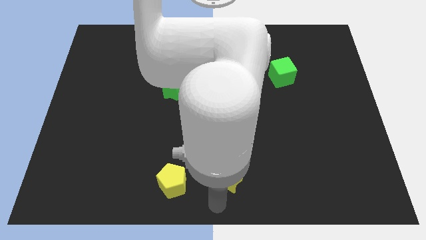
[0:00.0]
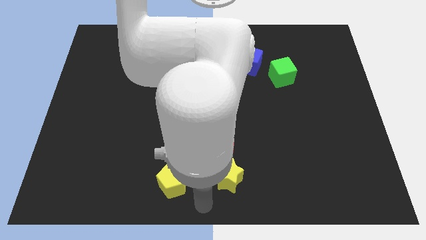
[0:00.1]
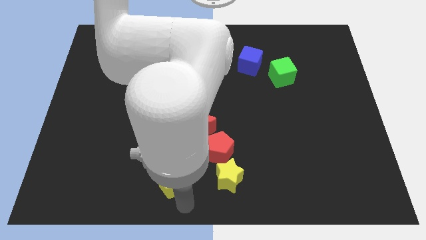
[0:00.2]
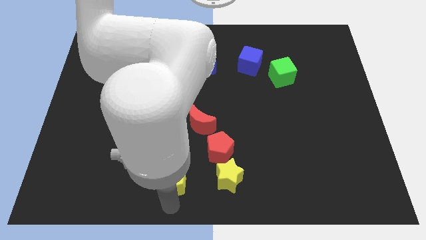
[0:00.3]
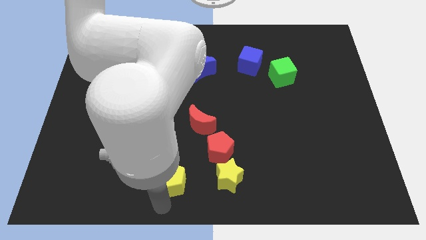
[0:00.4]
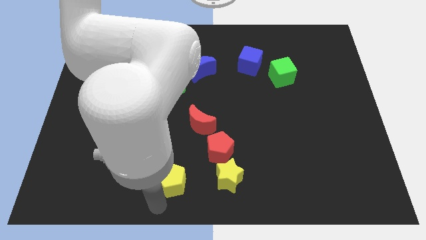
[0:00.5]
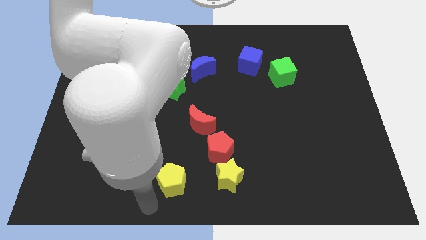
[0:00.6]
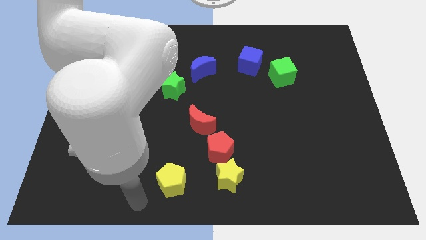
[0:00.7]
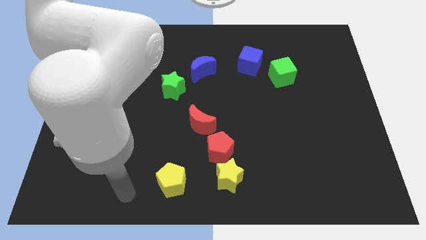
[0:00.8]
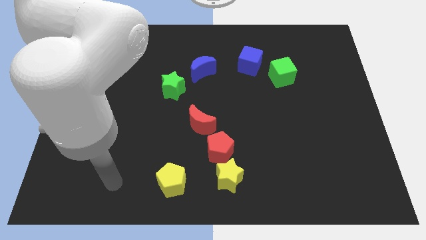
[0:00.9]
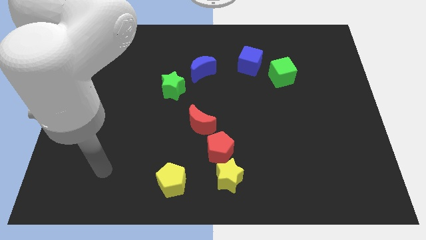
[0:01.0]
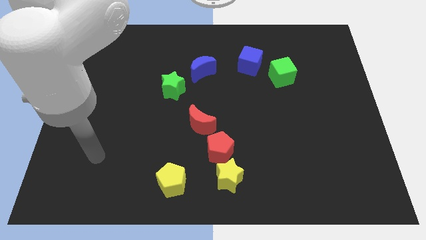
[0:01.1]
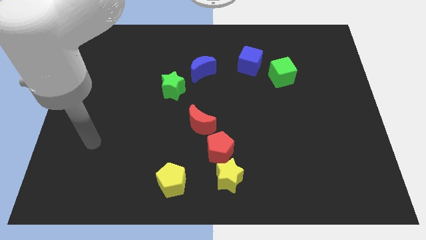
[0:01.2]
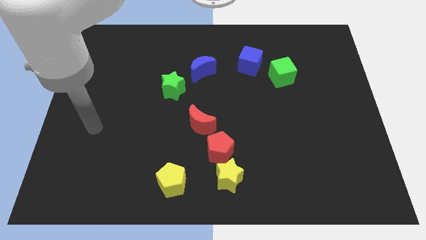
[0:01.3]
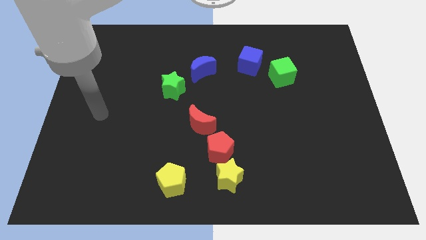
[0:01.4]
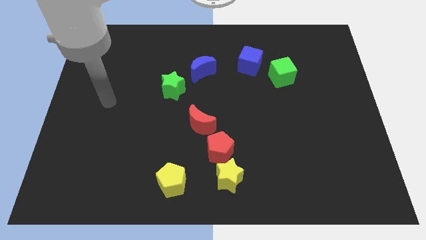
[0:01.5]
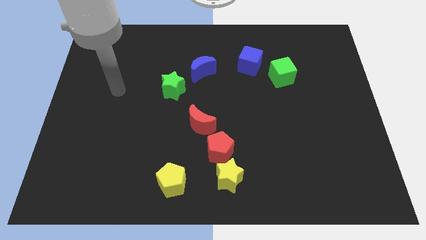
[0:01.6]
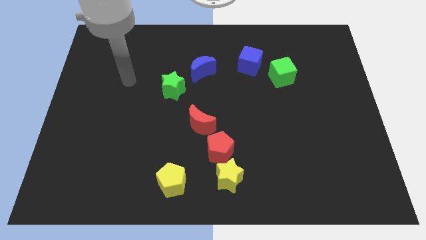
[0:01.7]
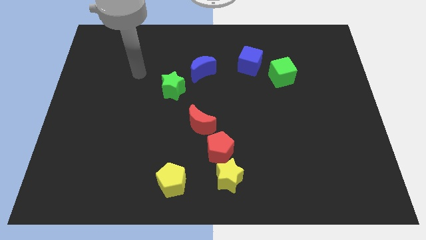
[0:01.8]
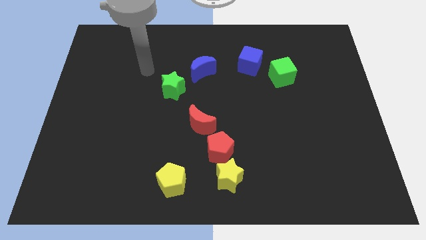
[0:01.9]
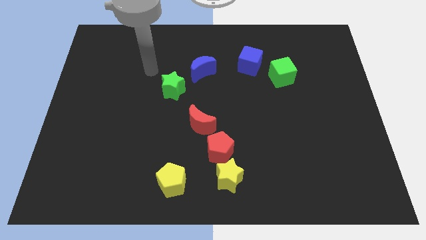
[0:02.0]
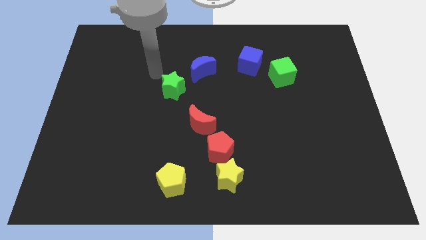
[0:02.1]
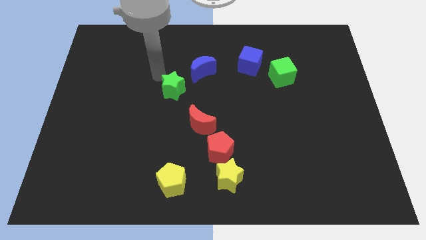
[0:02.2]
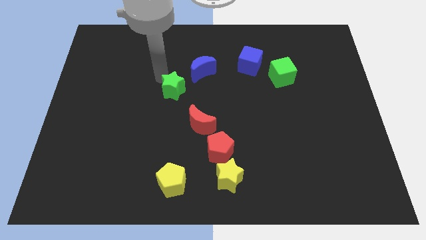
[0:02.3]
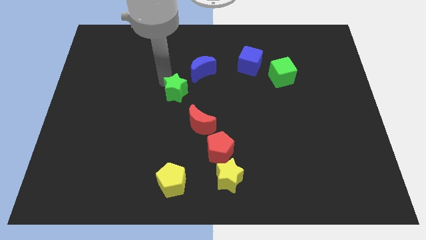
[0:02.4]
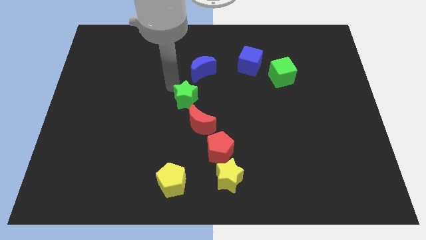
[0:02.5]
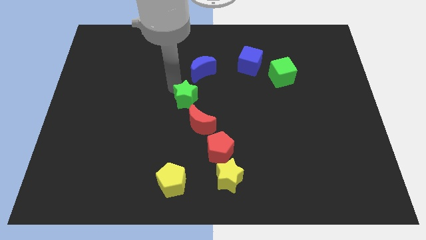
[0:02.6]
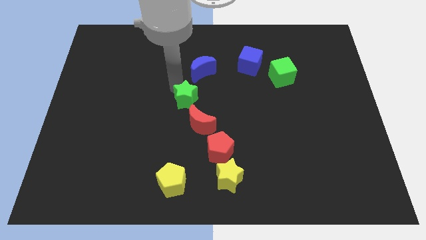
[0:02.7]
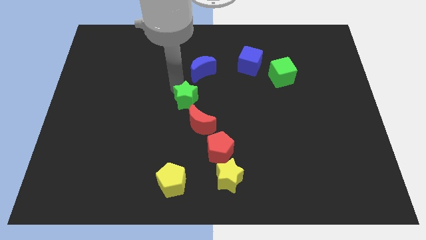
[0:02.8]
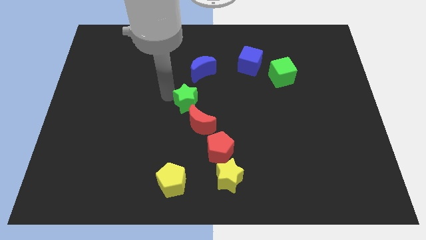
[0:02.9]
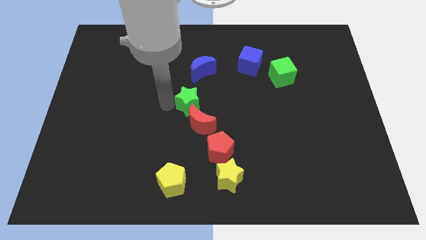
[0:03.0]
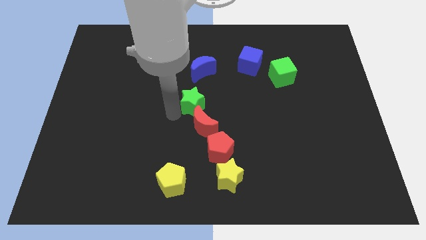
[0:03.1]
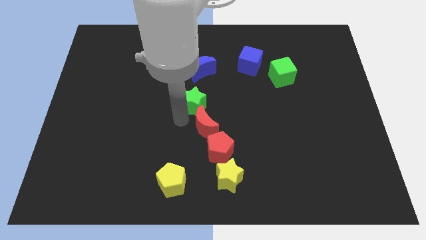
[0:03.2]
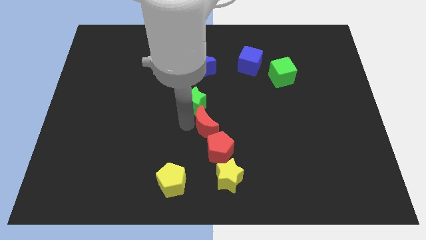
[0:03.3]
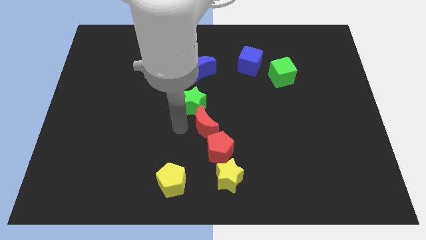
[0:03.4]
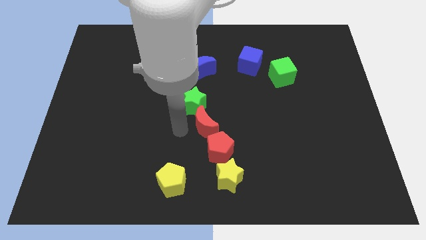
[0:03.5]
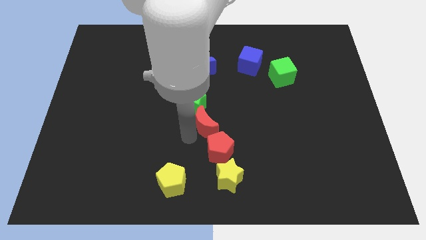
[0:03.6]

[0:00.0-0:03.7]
push the green star above to the red crescent

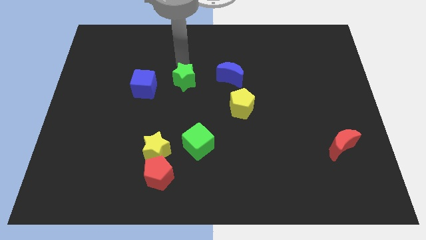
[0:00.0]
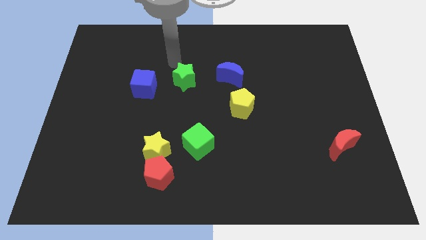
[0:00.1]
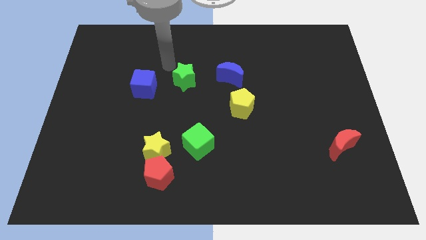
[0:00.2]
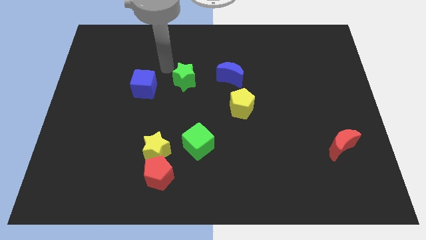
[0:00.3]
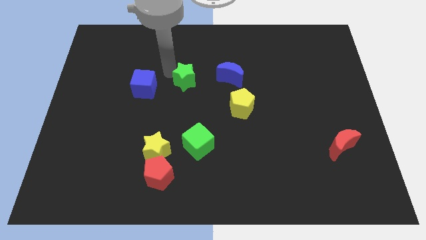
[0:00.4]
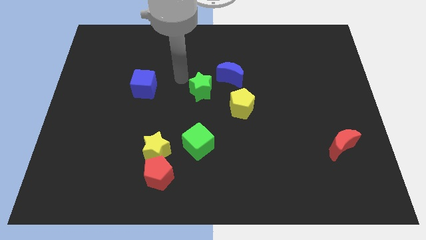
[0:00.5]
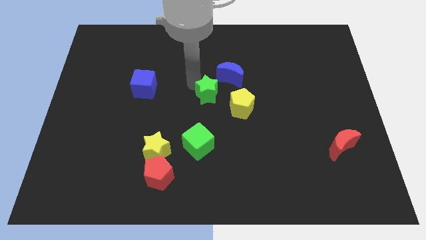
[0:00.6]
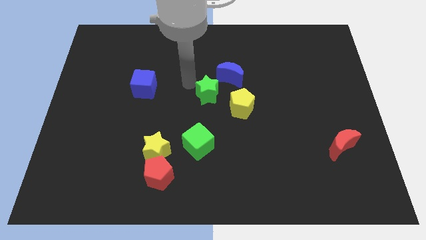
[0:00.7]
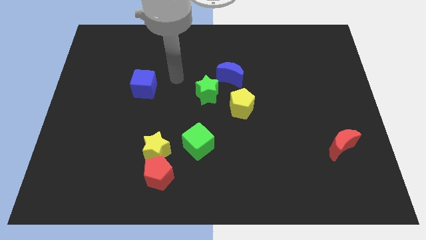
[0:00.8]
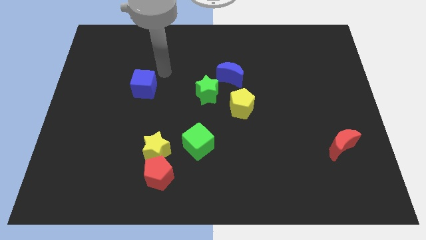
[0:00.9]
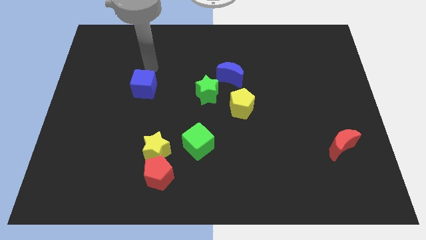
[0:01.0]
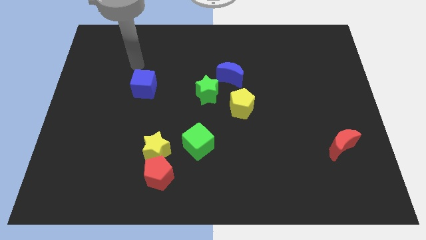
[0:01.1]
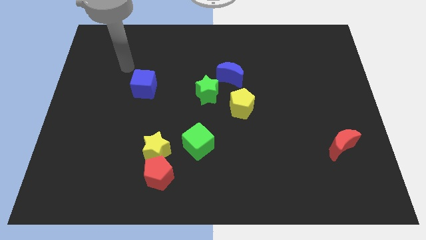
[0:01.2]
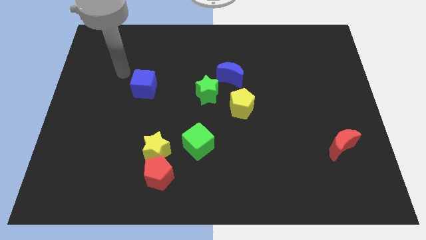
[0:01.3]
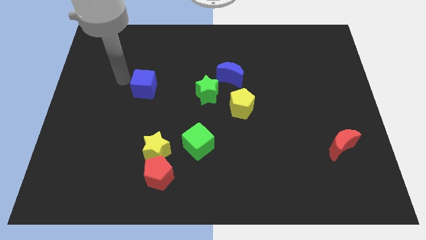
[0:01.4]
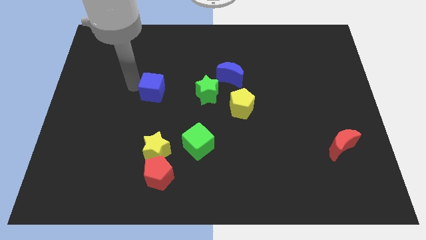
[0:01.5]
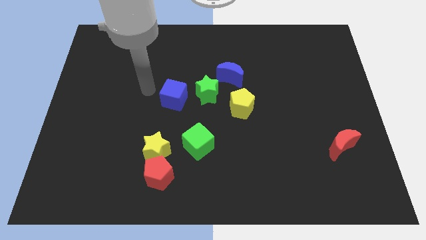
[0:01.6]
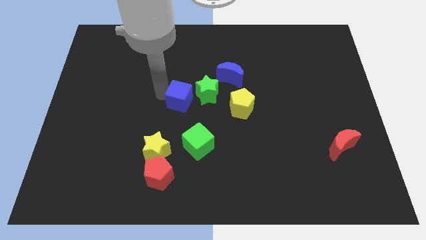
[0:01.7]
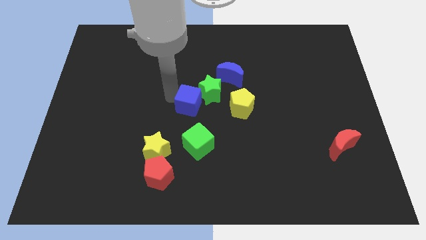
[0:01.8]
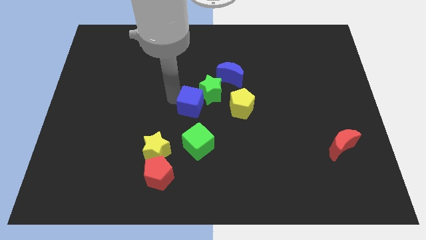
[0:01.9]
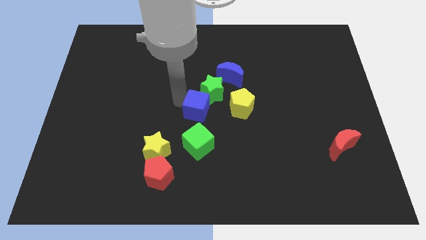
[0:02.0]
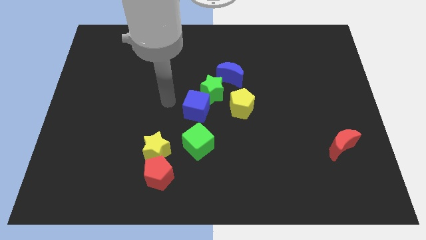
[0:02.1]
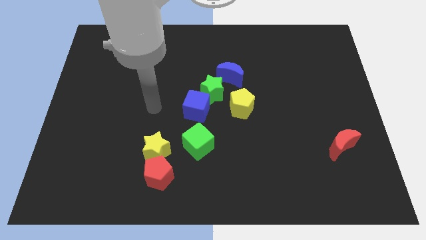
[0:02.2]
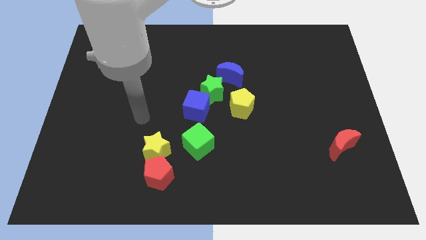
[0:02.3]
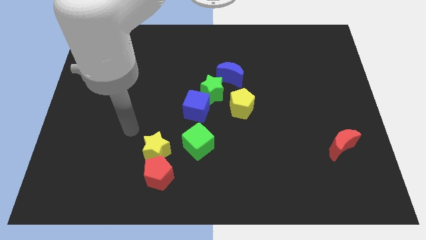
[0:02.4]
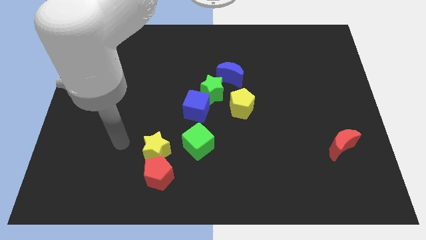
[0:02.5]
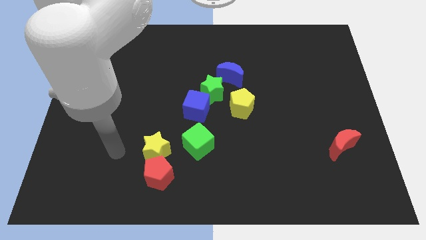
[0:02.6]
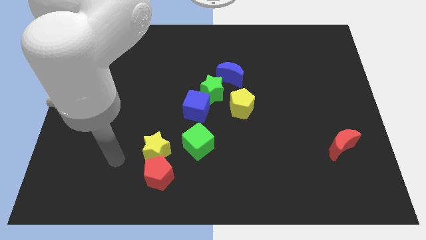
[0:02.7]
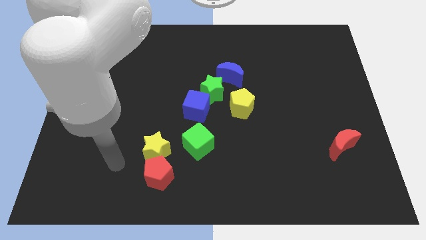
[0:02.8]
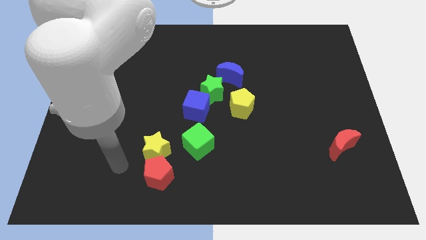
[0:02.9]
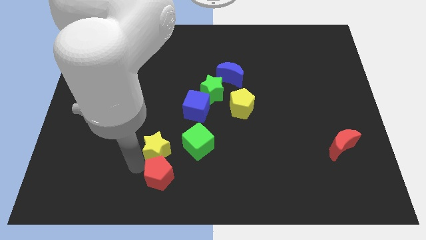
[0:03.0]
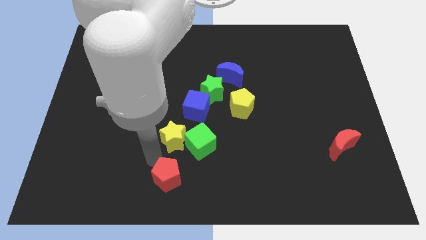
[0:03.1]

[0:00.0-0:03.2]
push the blue cube into the green star

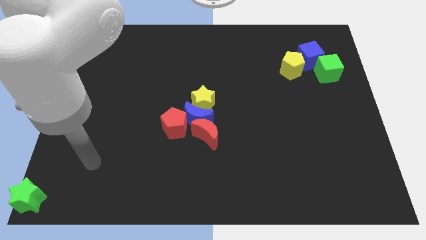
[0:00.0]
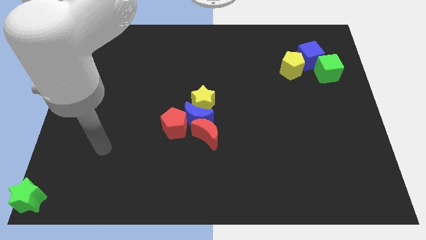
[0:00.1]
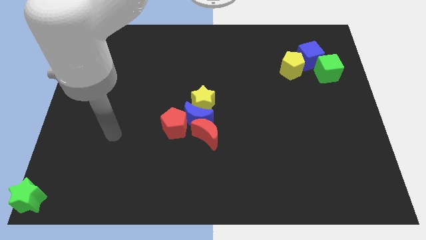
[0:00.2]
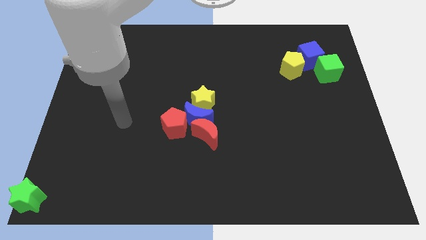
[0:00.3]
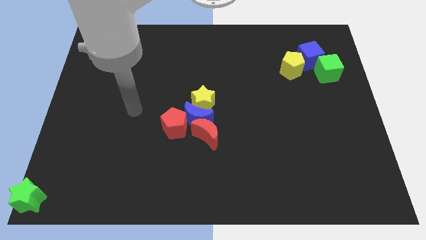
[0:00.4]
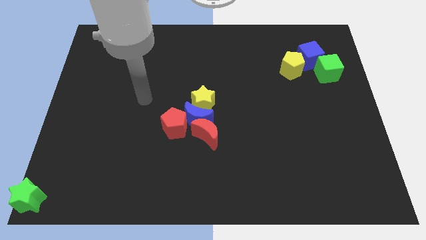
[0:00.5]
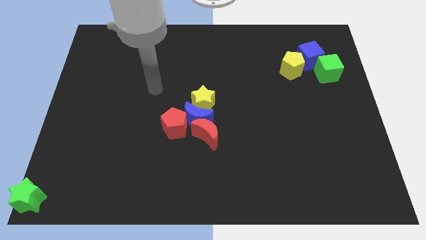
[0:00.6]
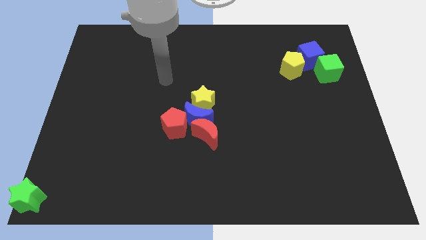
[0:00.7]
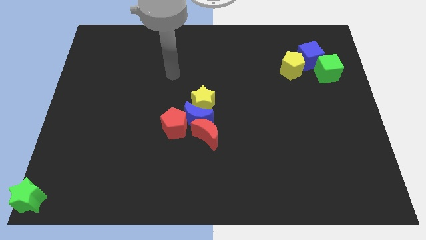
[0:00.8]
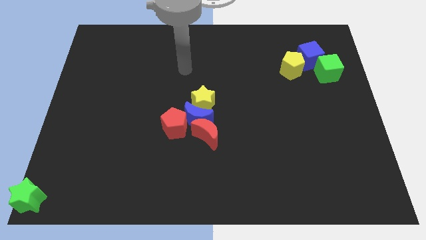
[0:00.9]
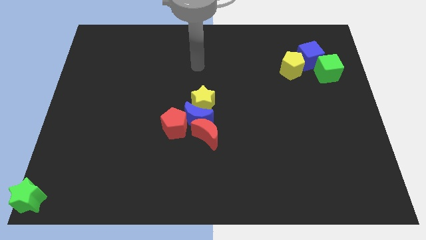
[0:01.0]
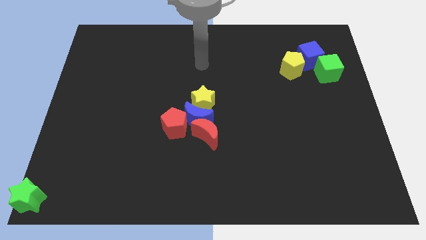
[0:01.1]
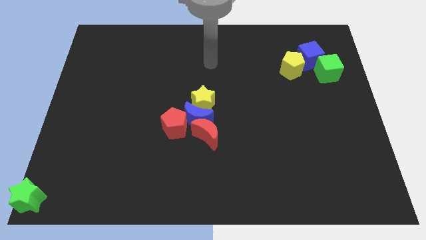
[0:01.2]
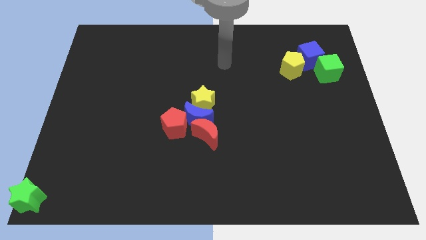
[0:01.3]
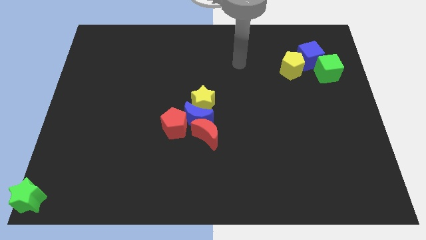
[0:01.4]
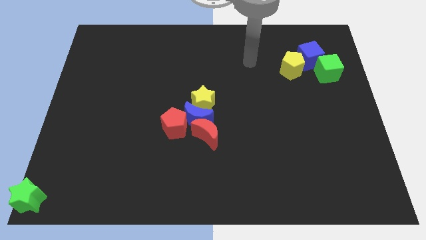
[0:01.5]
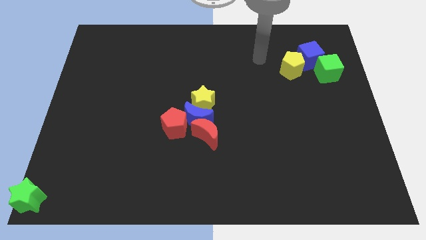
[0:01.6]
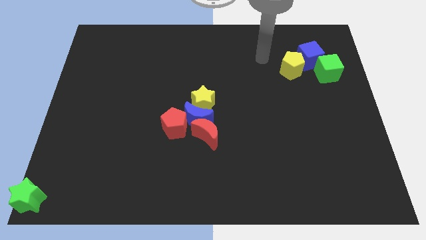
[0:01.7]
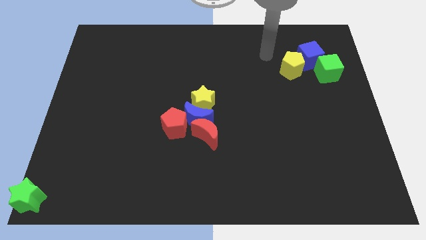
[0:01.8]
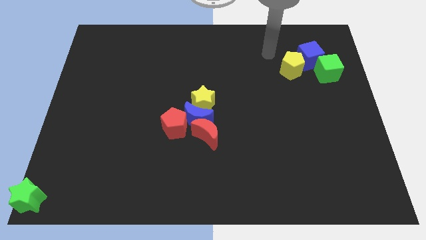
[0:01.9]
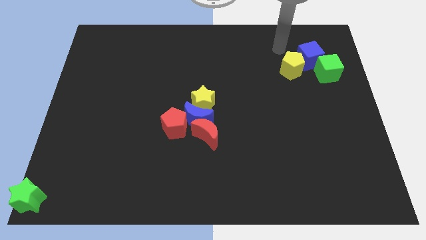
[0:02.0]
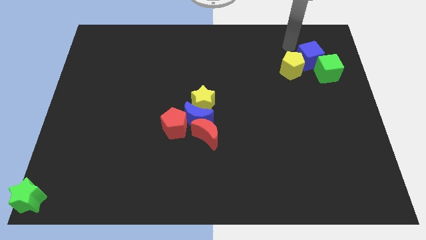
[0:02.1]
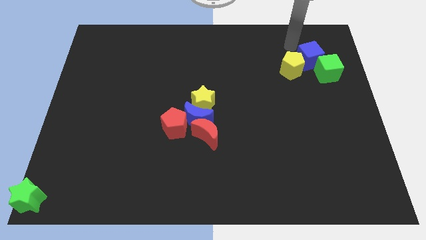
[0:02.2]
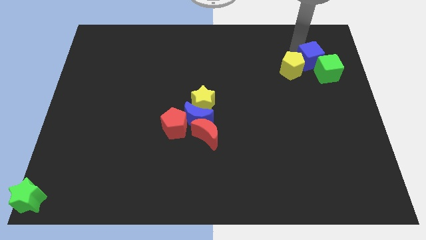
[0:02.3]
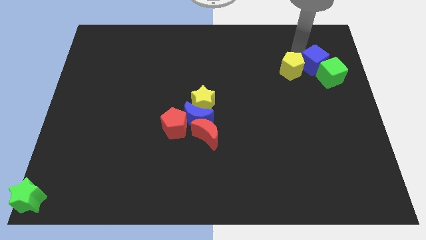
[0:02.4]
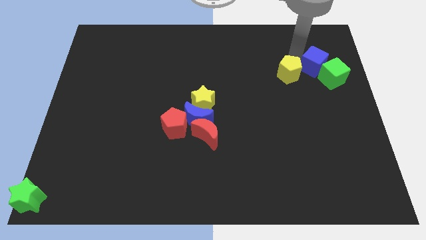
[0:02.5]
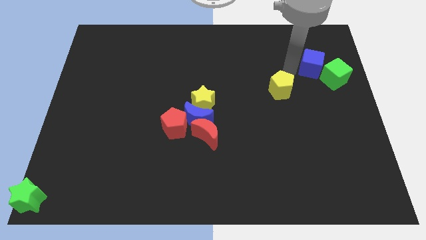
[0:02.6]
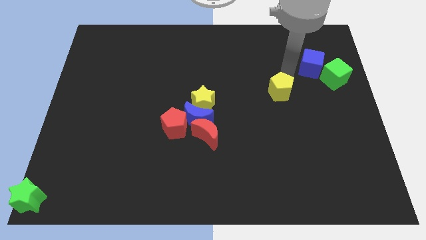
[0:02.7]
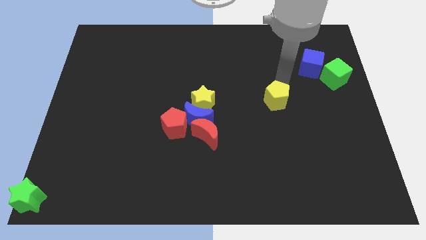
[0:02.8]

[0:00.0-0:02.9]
separate the yellow pentagon fron blue cube
